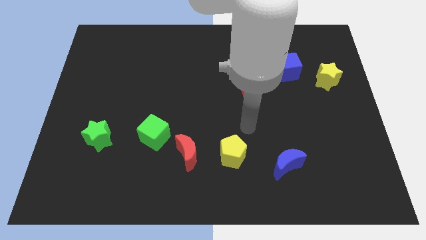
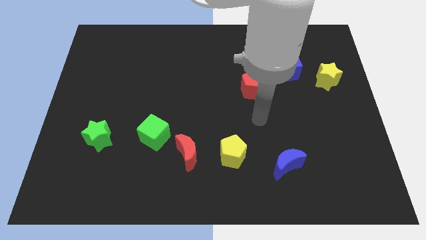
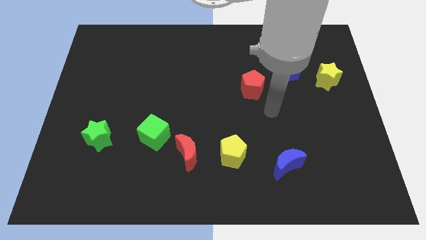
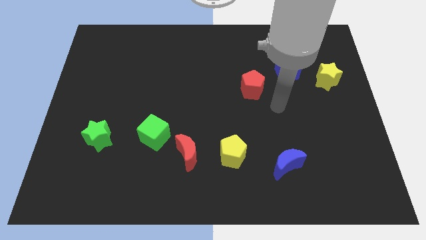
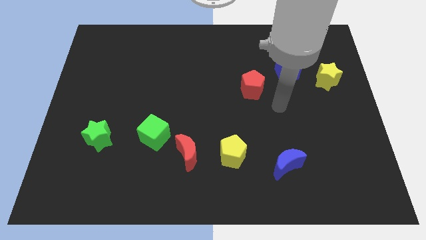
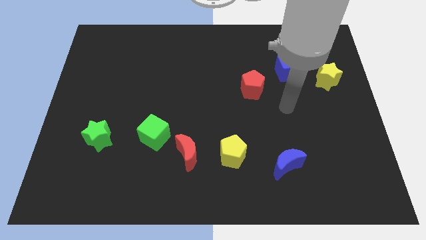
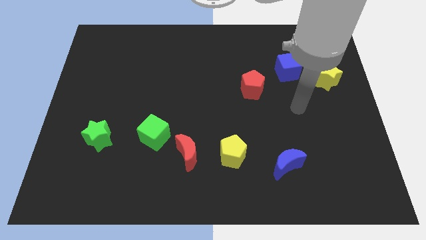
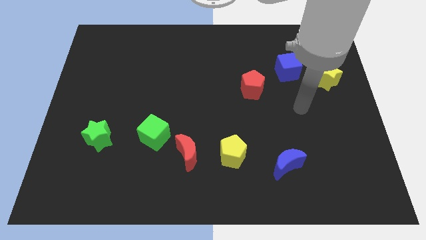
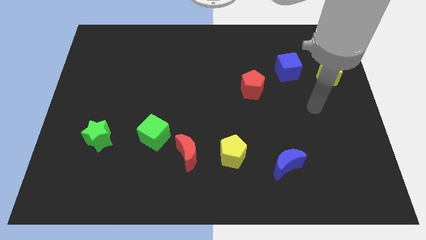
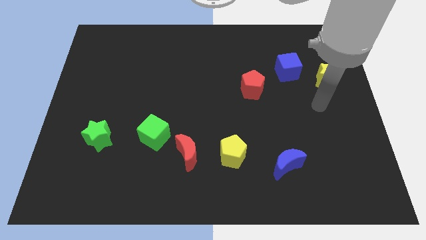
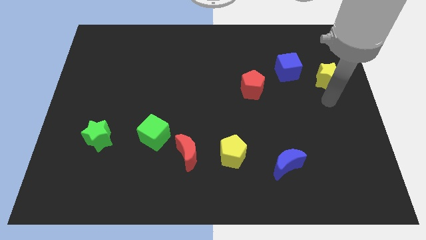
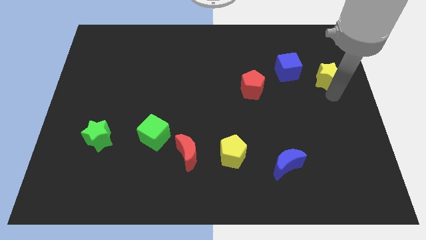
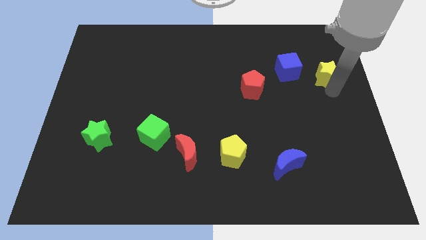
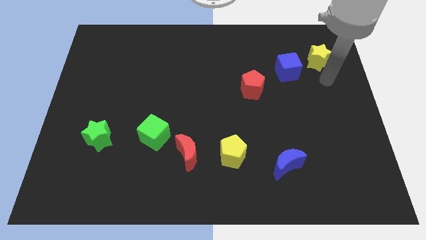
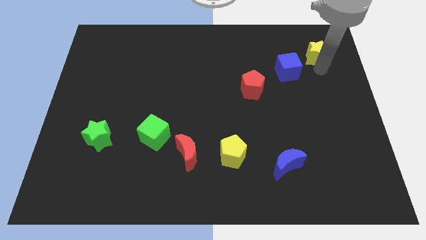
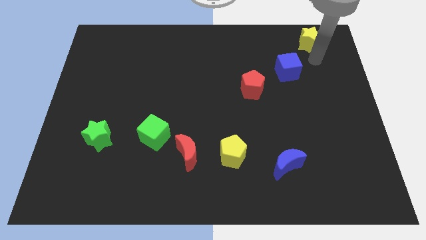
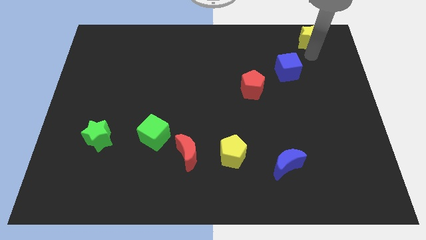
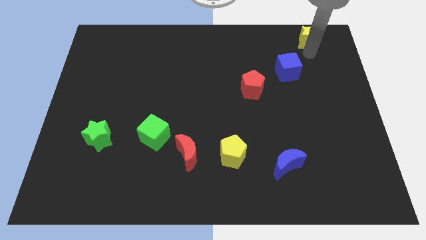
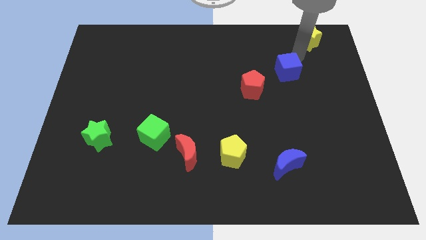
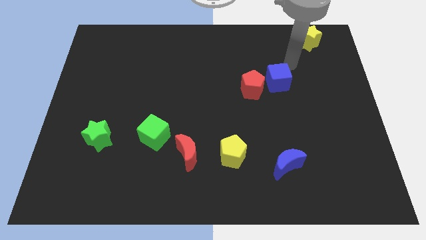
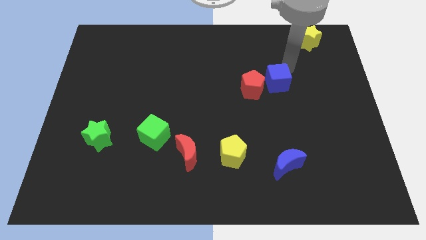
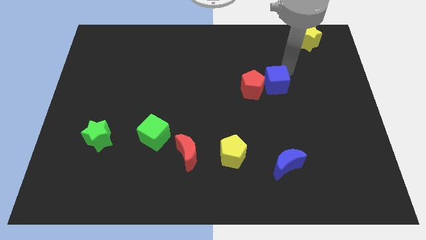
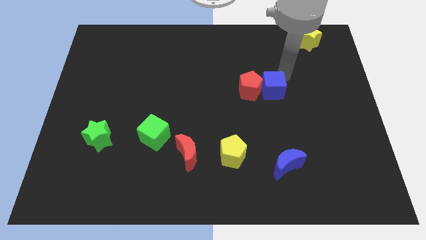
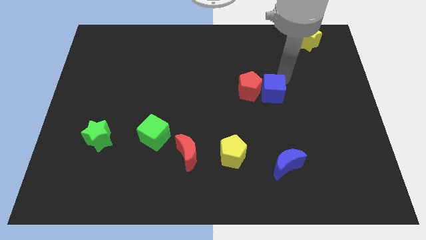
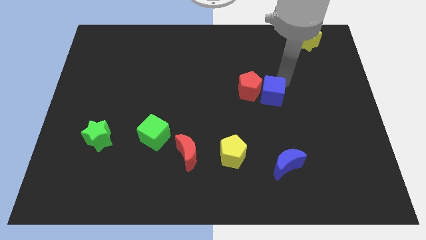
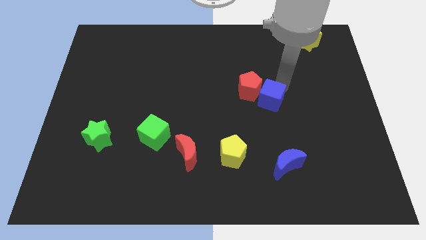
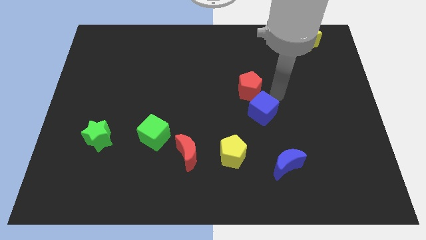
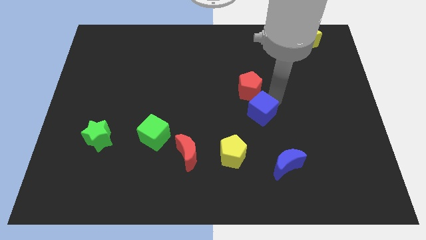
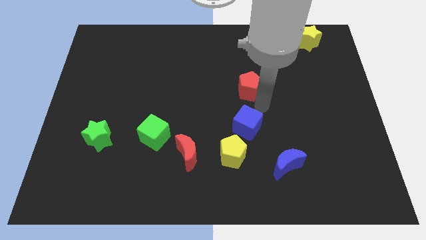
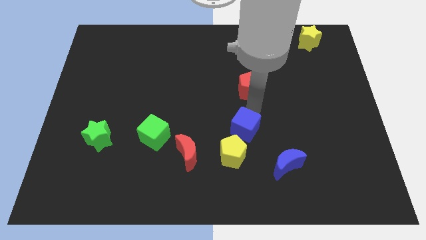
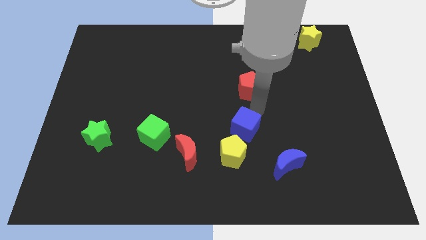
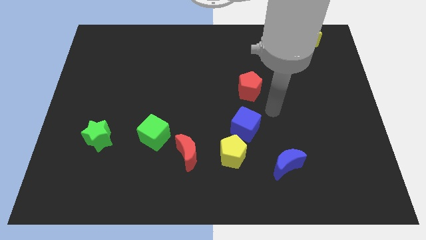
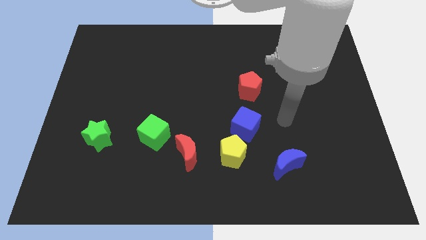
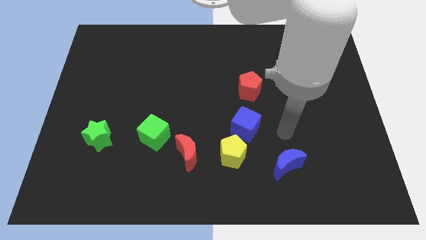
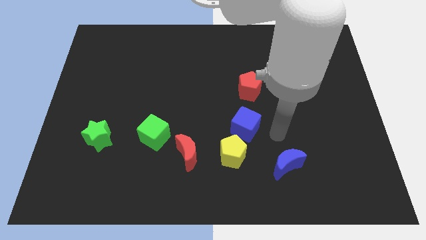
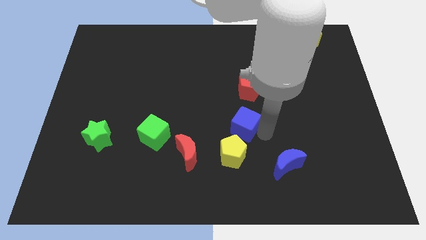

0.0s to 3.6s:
put the blue cube diagonally in between the yellow star and yellow pentagon

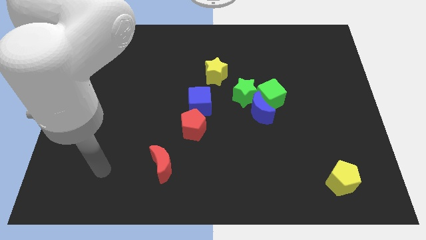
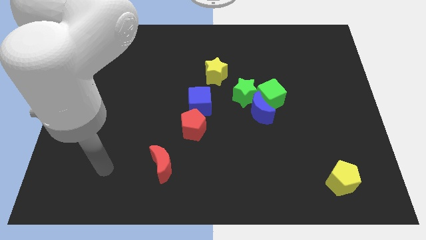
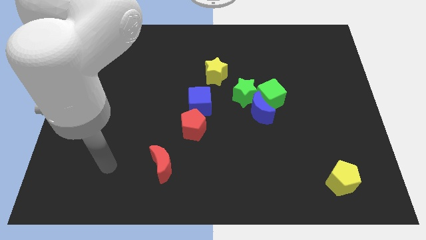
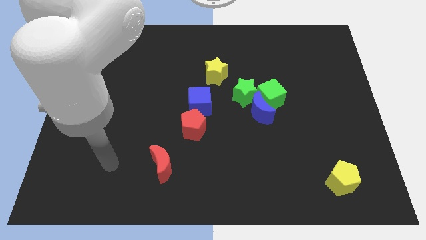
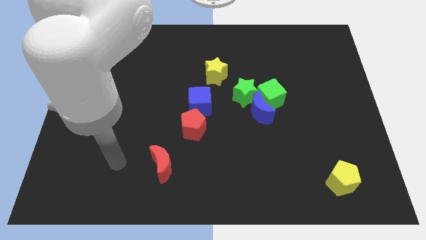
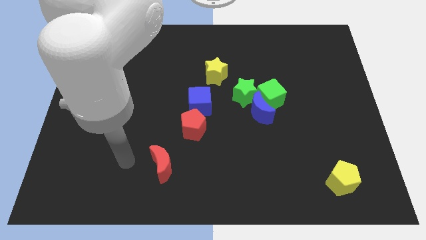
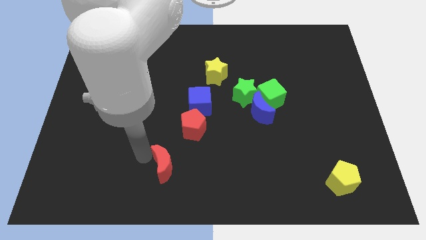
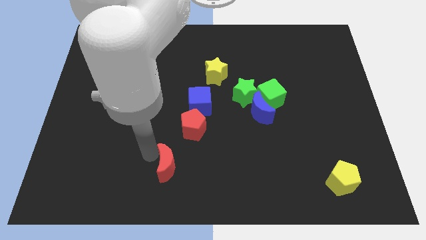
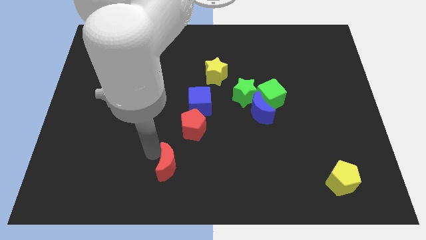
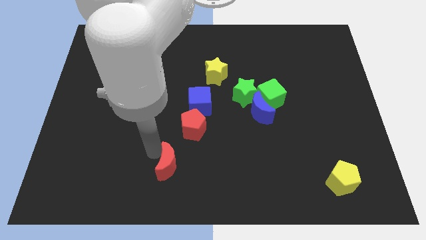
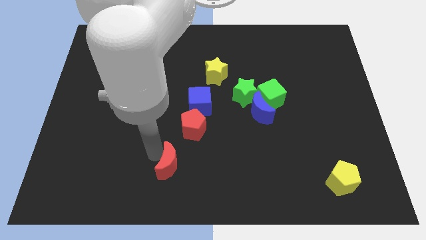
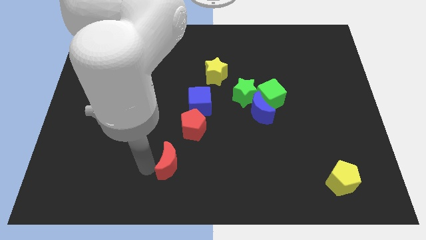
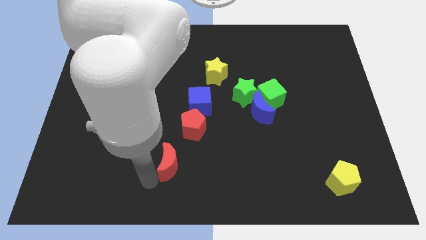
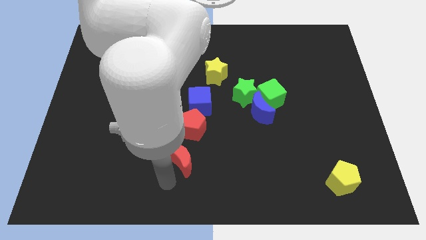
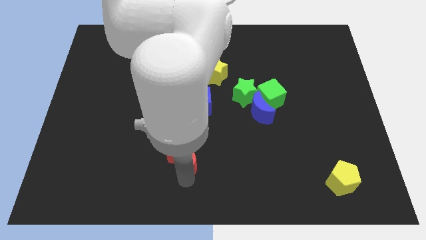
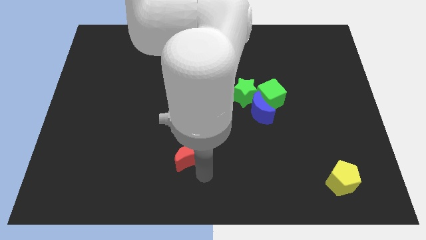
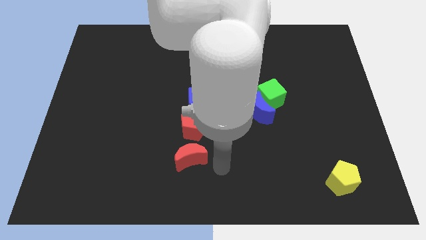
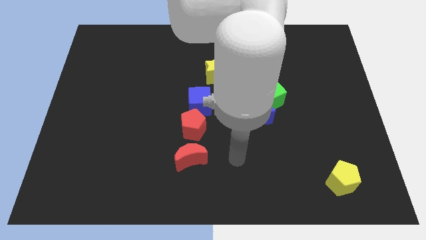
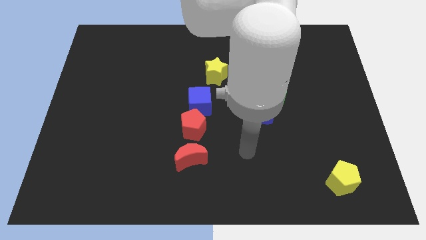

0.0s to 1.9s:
turn the red moon below red pentagon

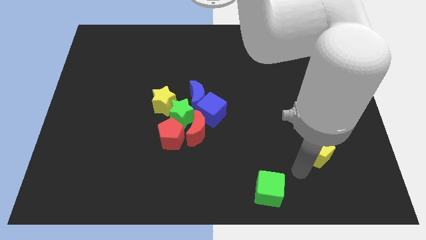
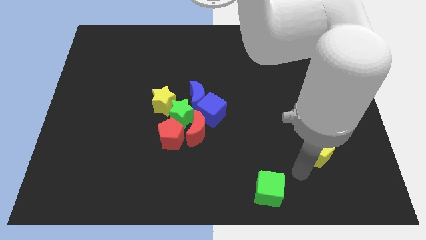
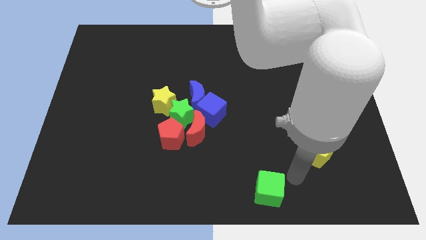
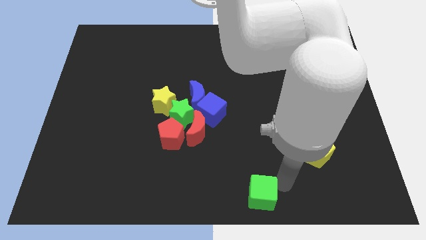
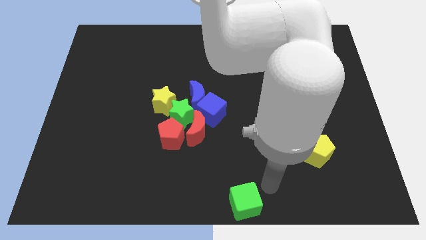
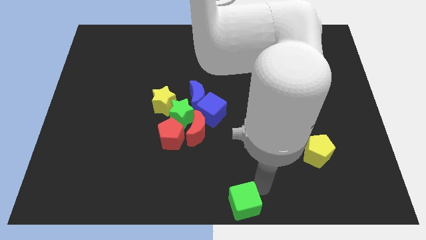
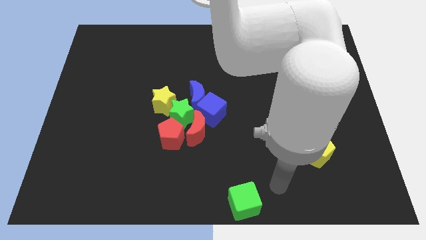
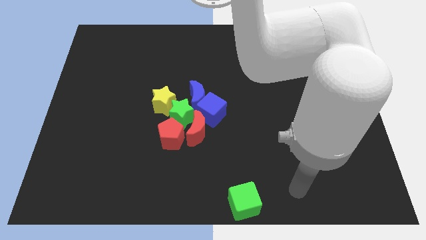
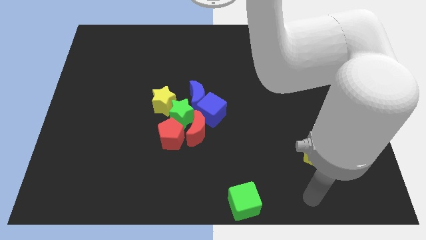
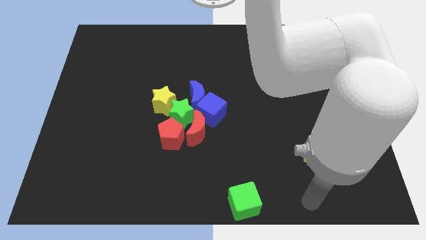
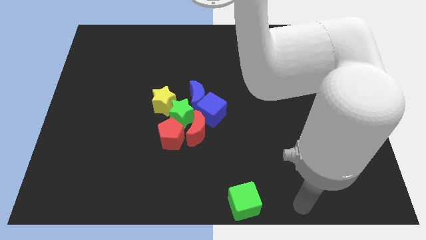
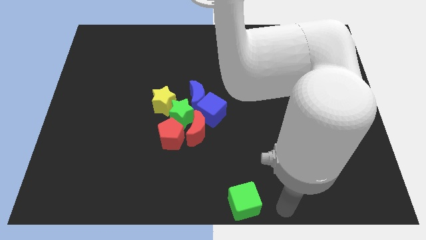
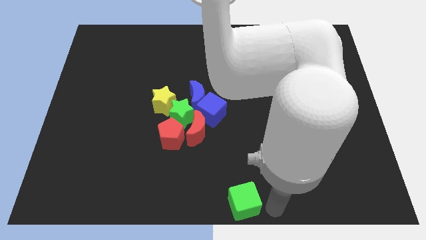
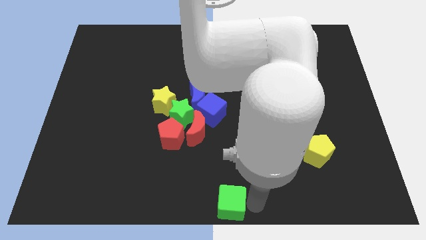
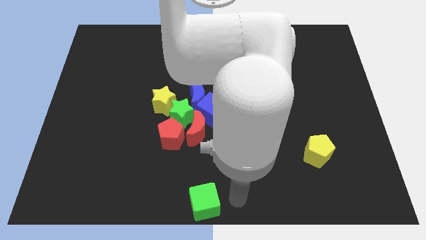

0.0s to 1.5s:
place blue cube to the bottom center

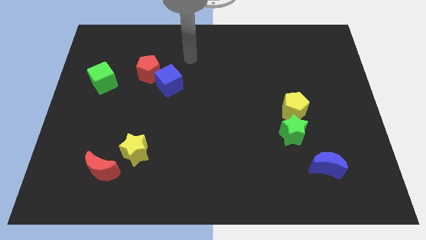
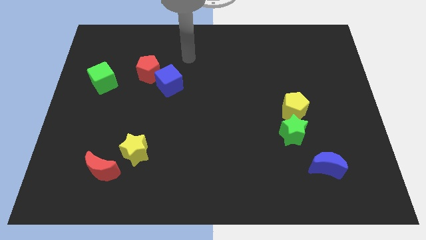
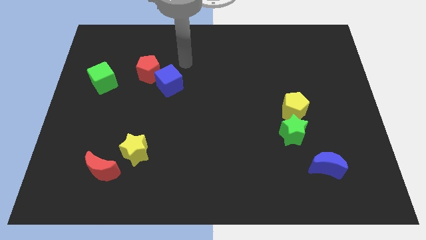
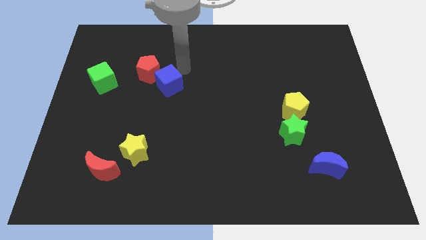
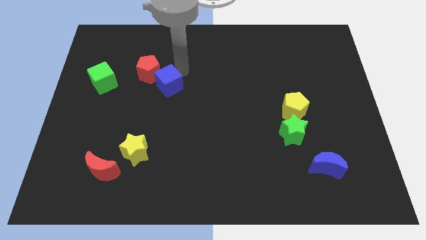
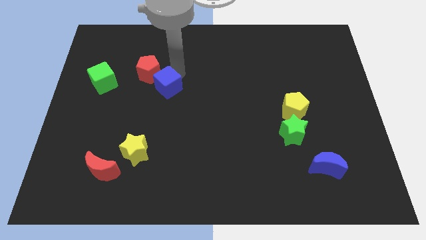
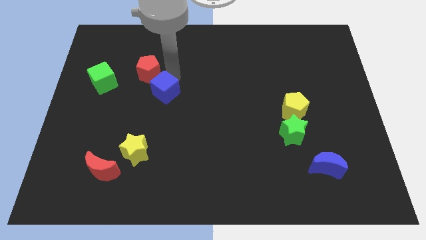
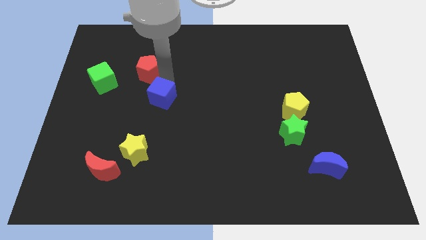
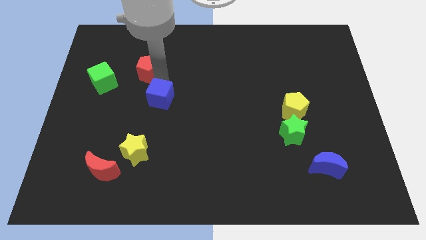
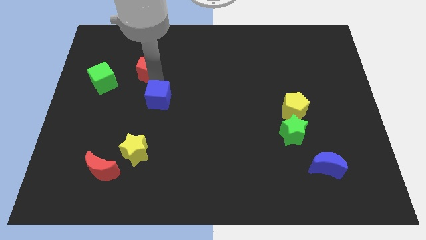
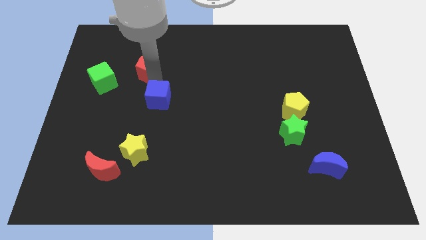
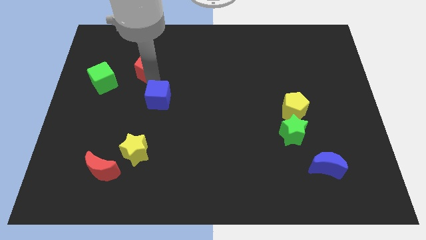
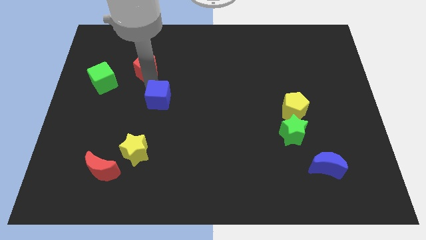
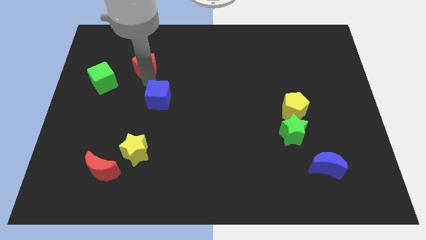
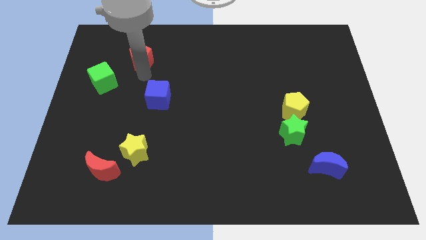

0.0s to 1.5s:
separate the red pentagon from the blue cube

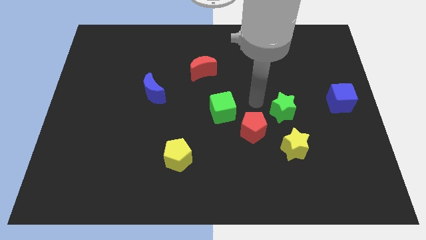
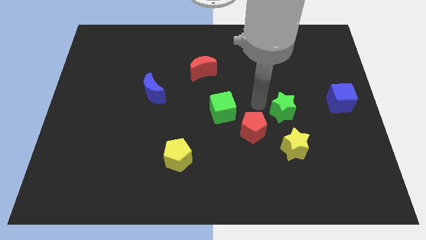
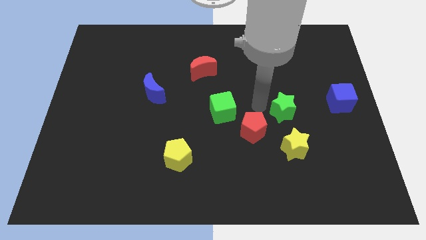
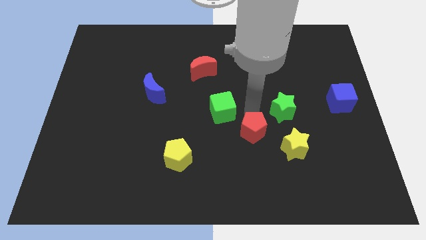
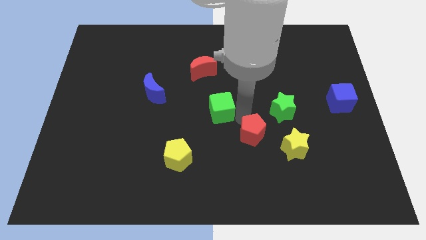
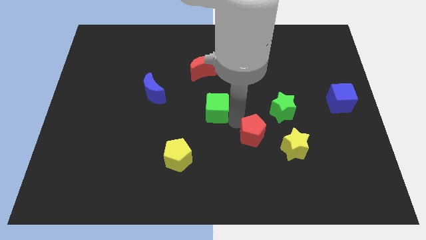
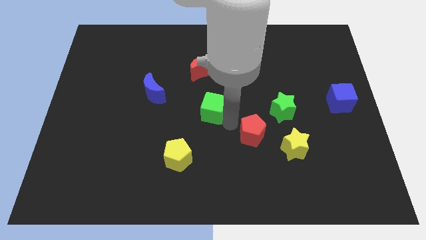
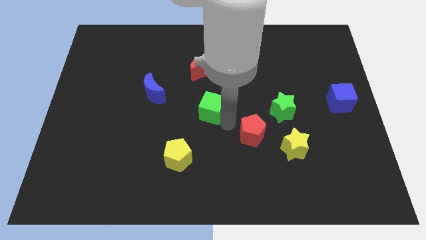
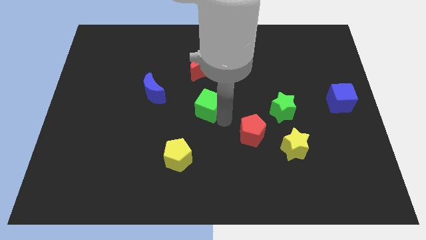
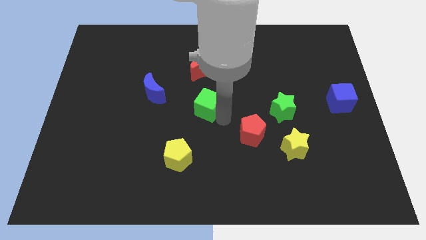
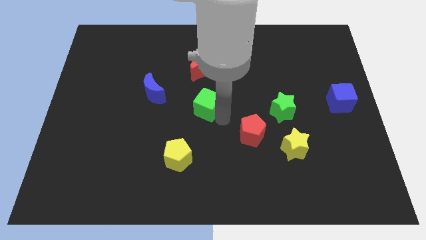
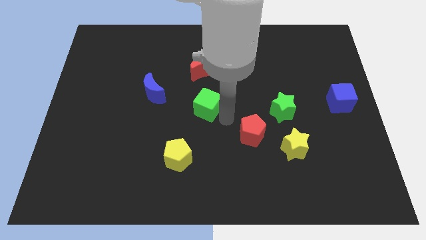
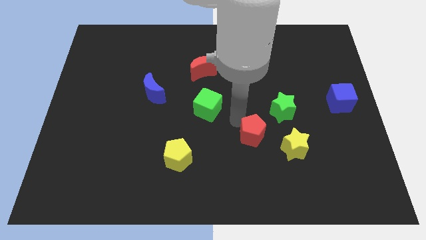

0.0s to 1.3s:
place the green cube below the red crescent
